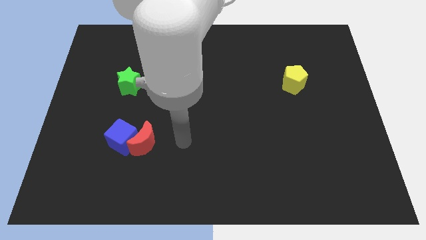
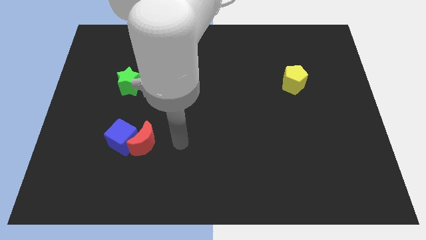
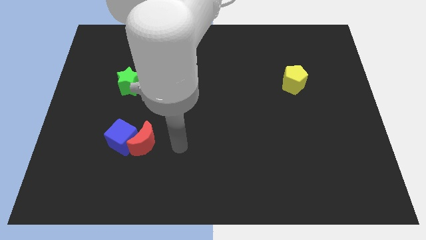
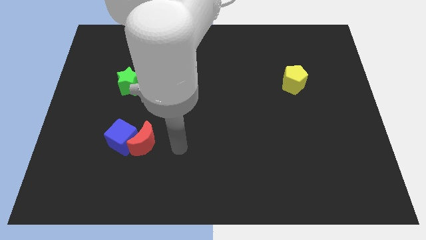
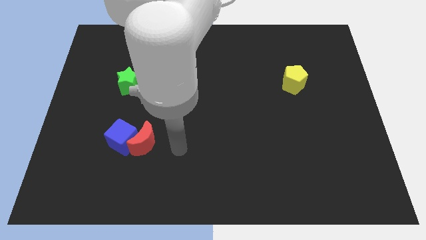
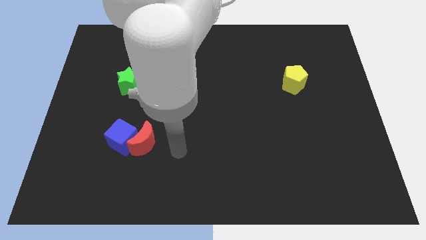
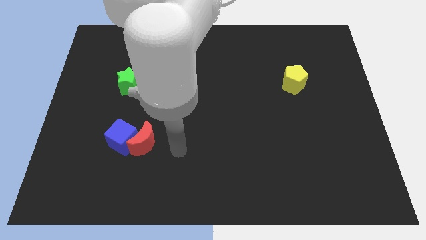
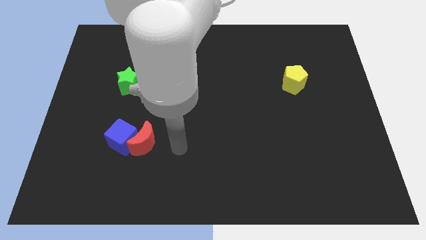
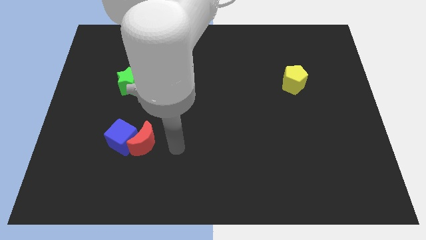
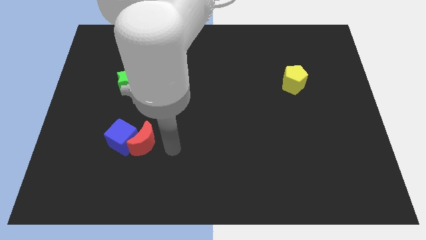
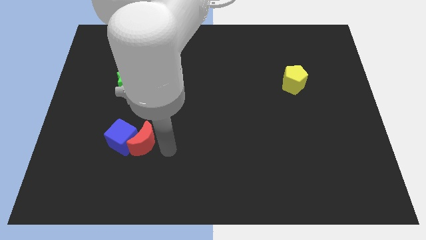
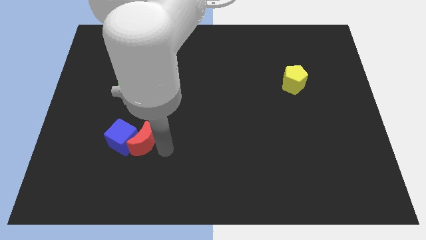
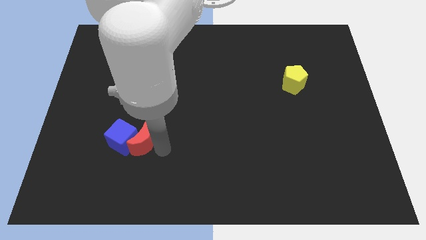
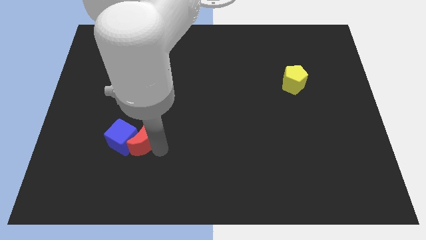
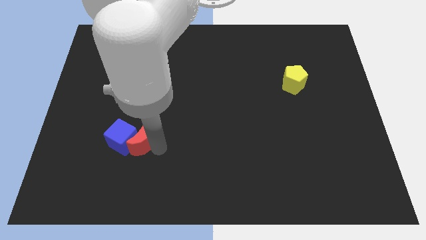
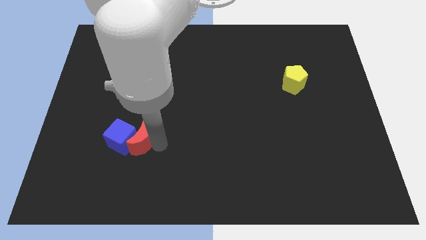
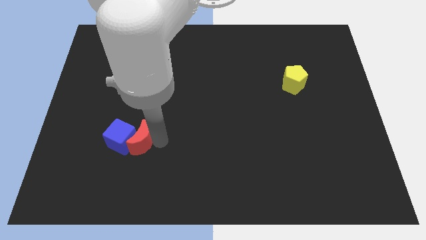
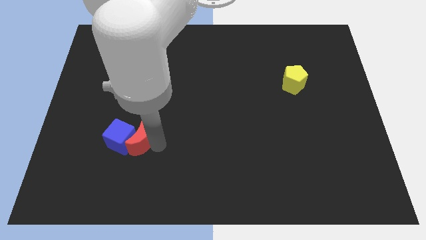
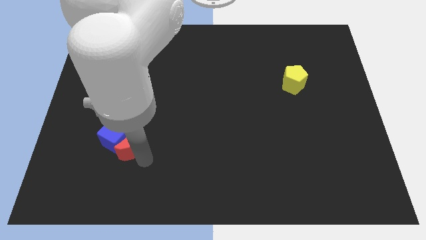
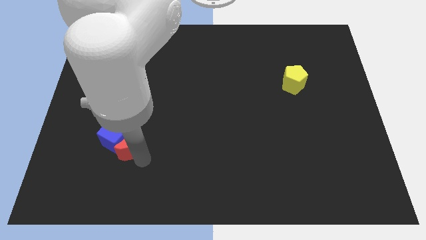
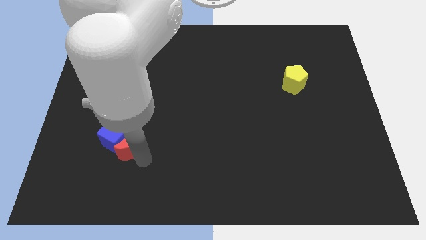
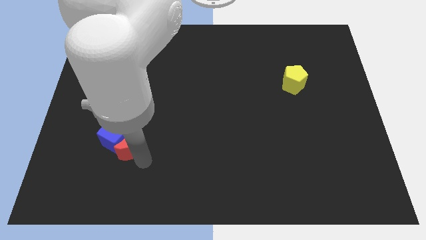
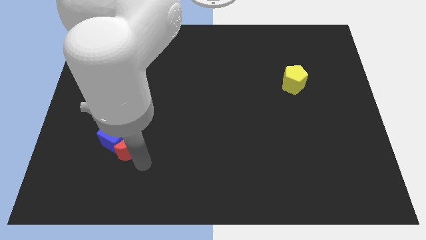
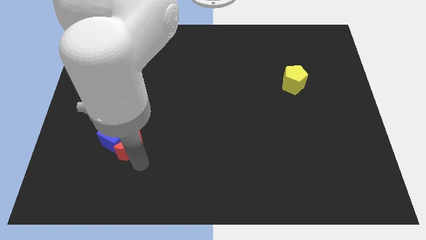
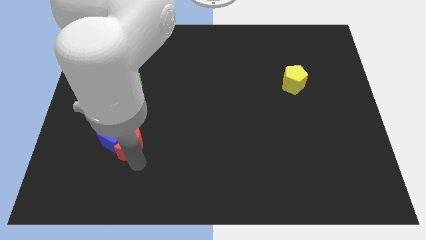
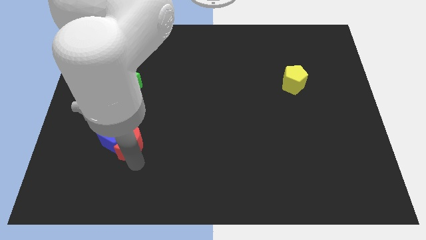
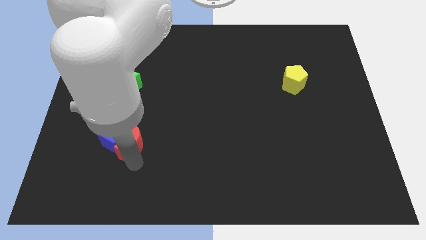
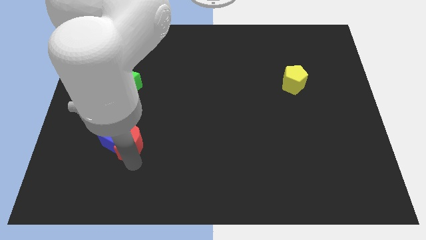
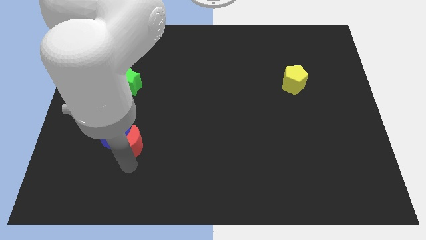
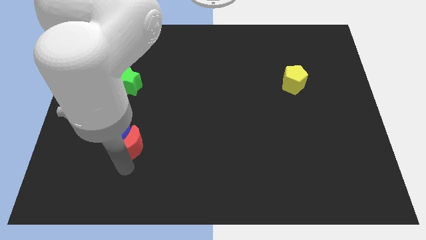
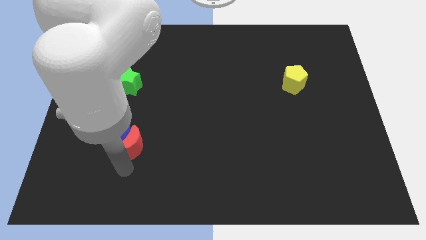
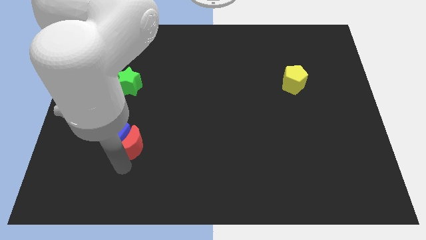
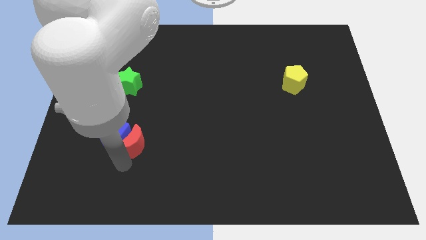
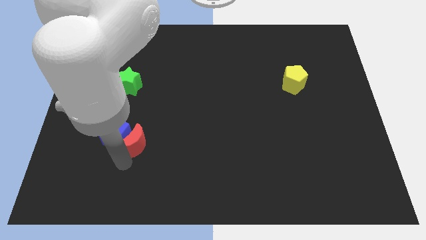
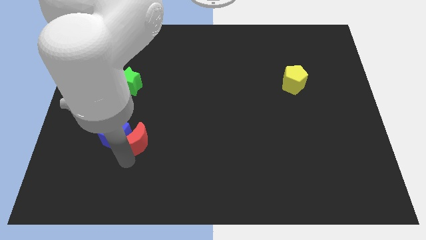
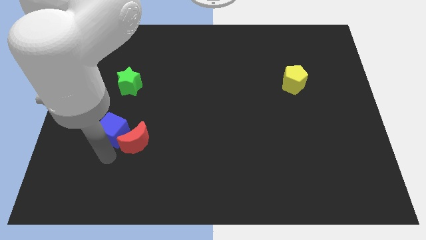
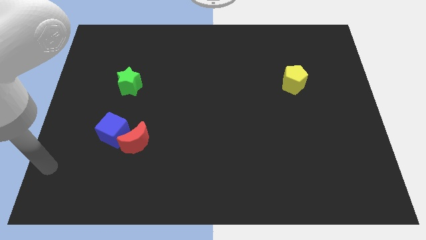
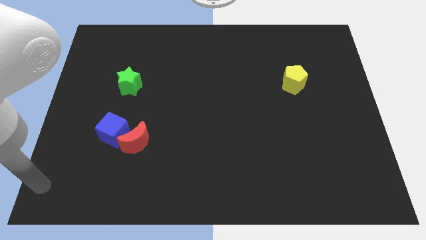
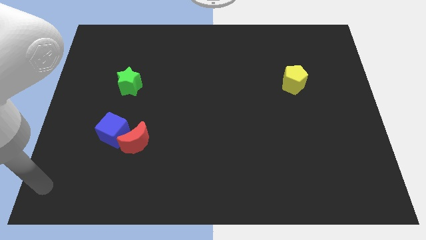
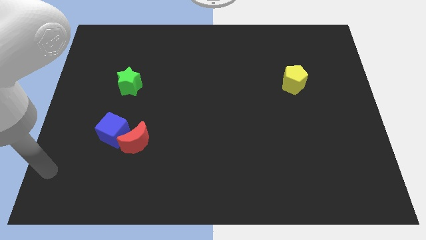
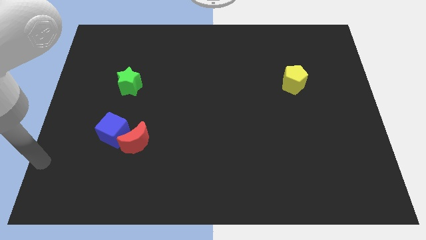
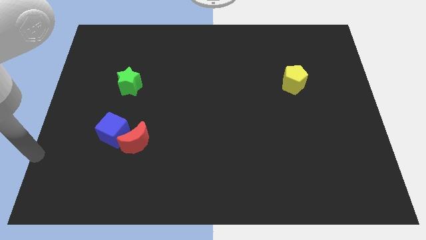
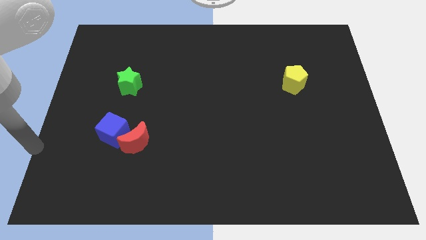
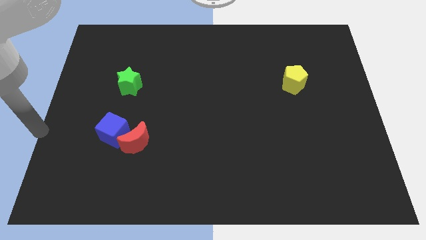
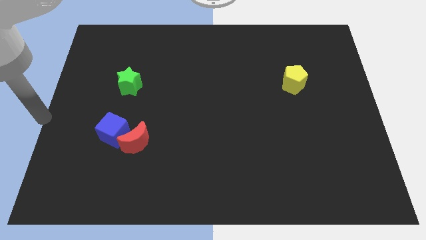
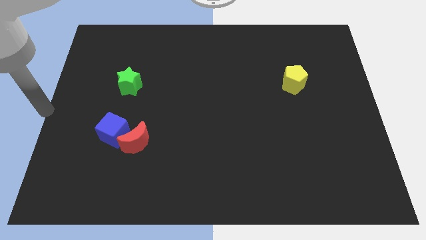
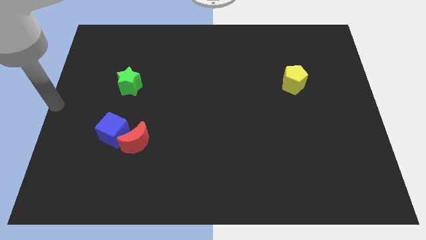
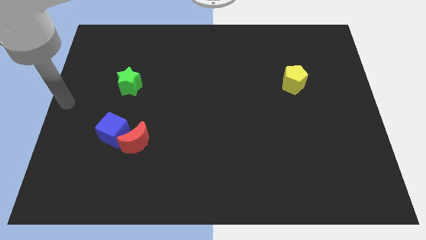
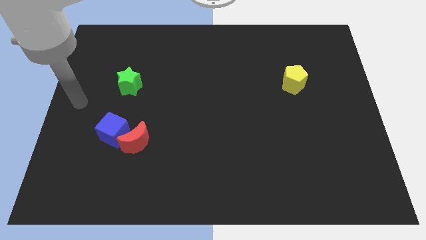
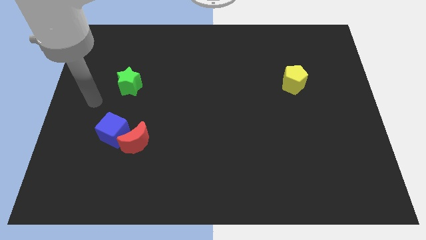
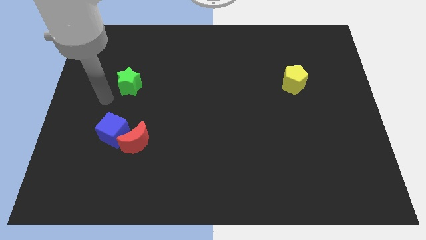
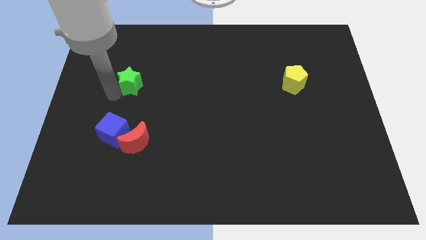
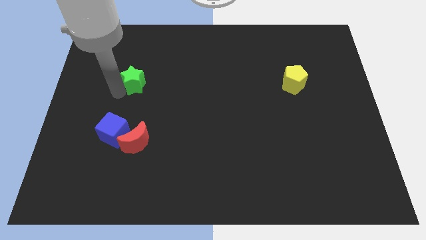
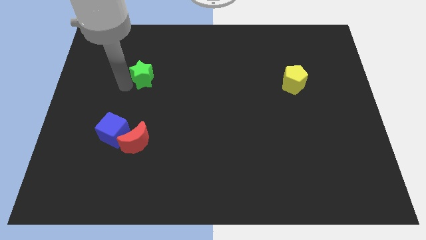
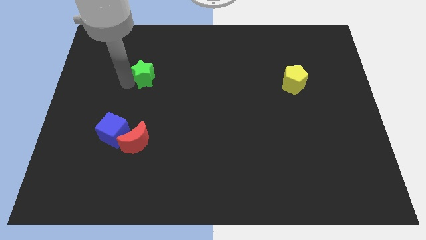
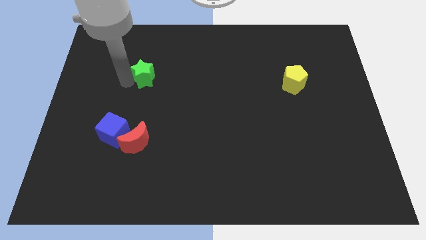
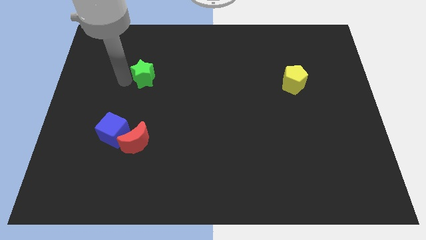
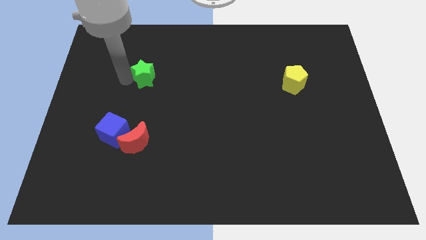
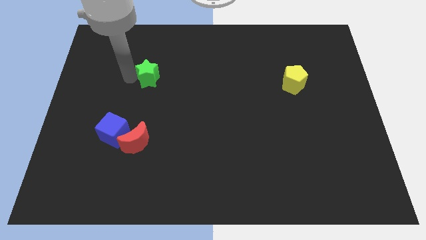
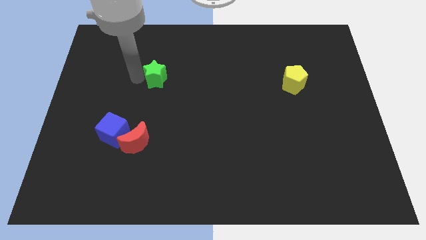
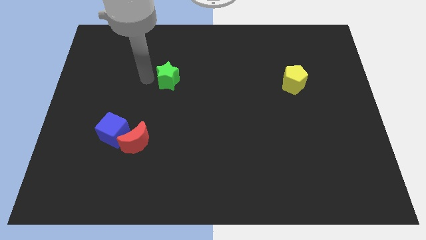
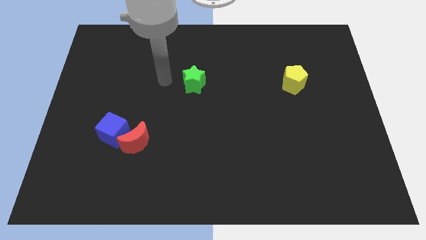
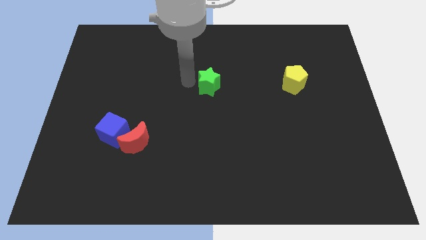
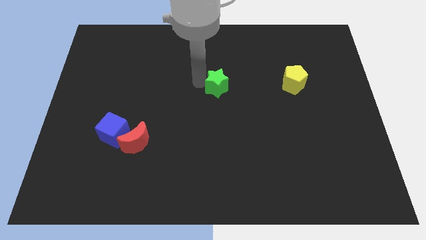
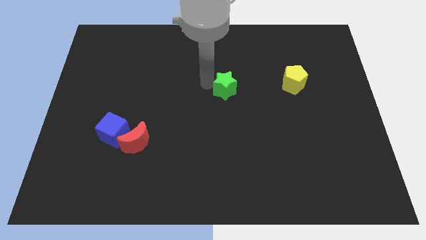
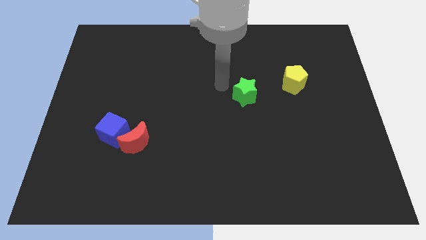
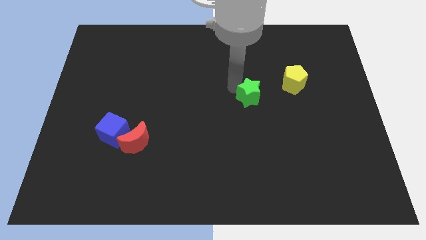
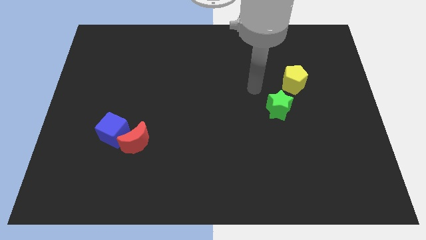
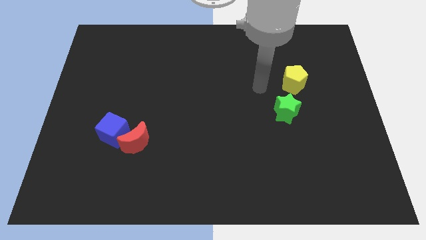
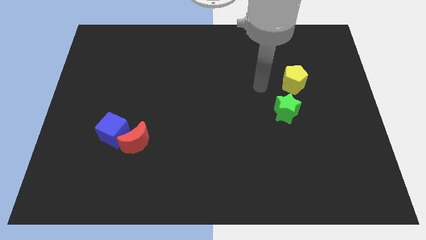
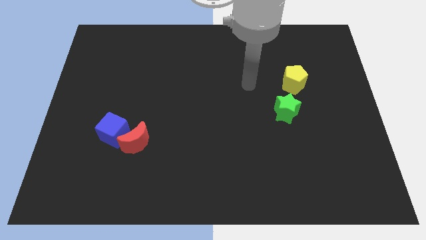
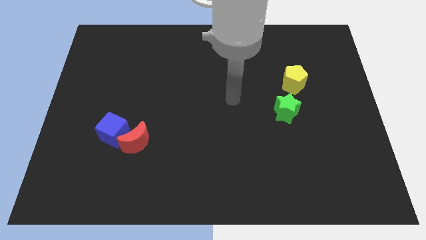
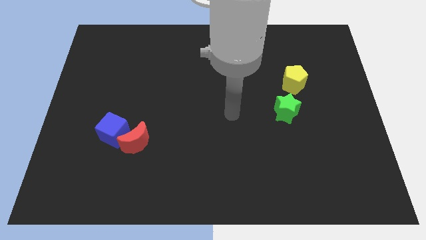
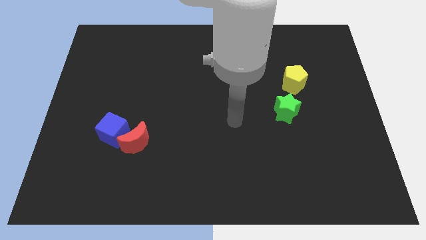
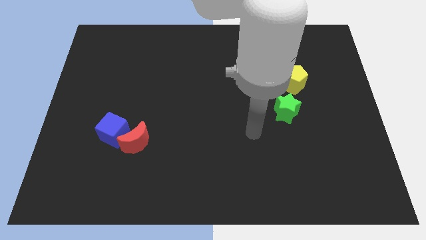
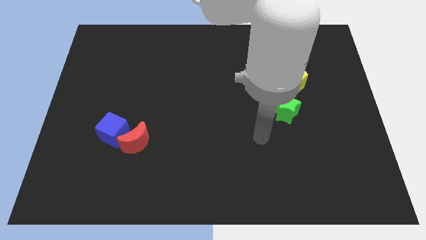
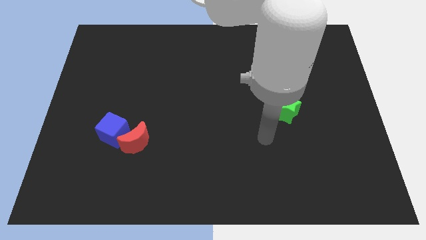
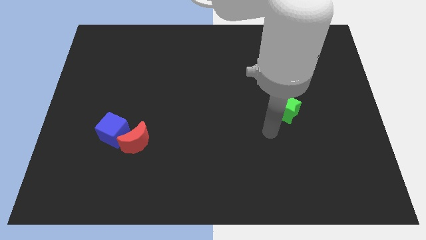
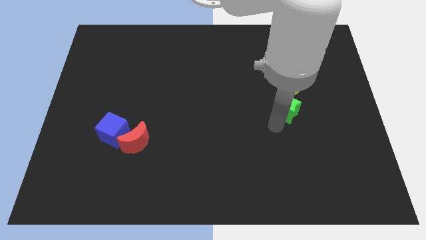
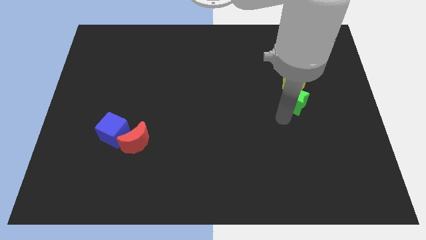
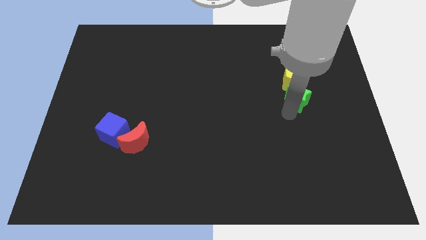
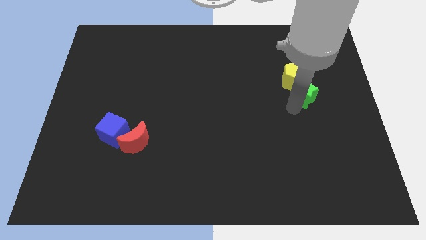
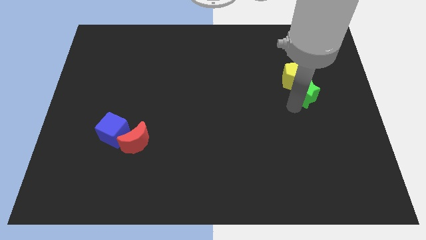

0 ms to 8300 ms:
slide the green block towards the yellow pentagon

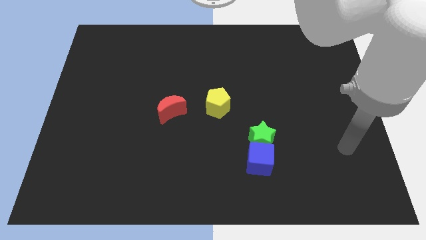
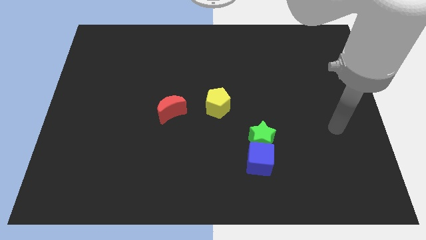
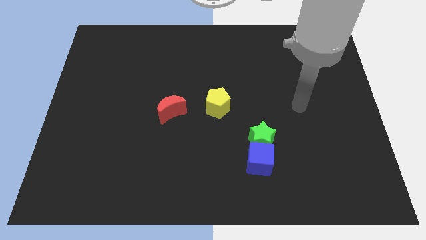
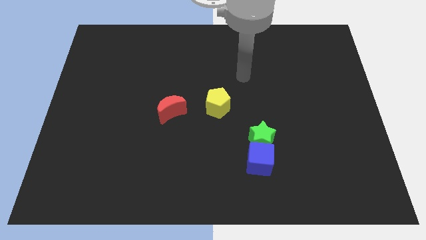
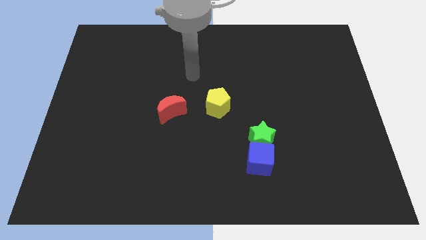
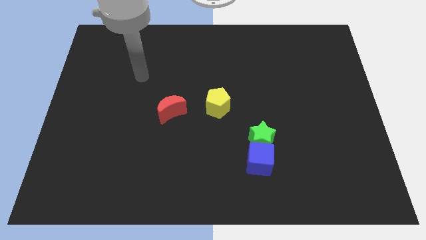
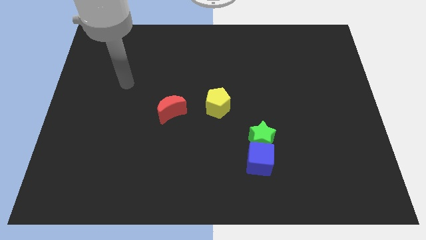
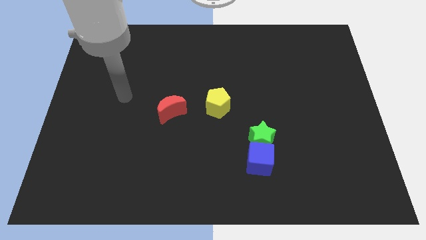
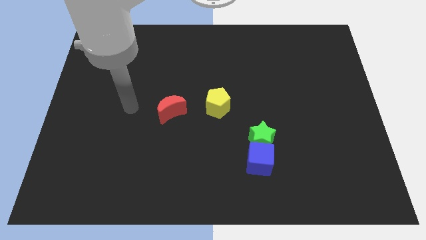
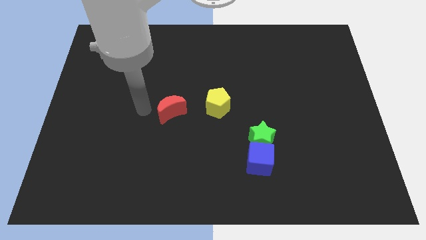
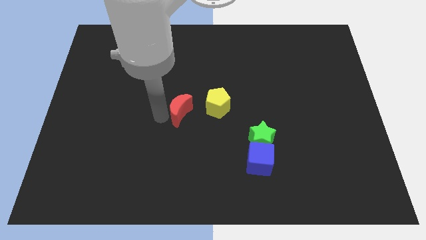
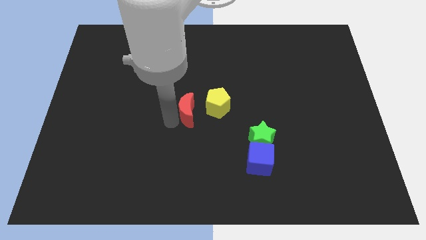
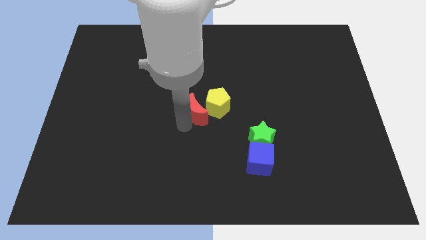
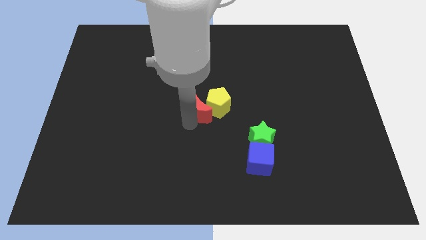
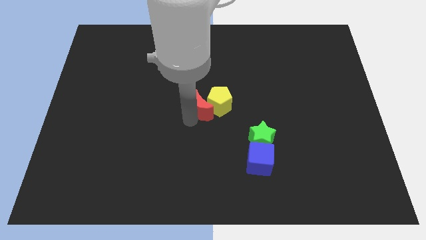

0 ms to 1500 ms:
slide the moon close to the yellow block
